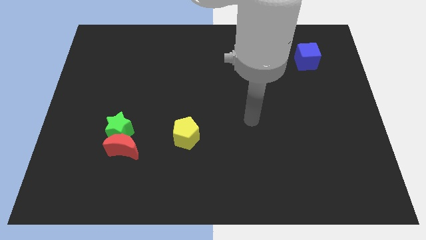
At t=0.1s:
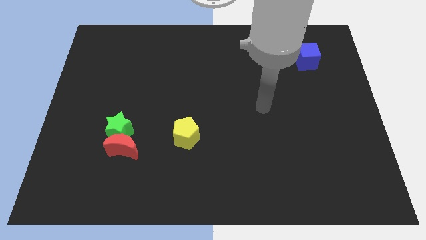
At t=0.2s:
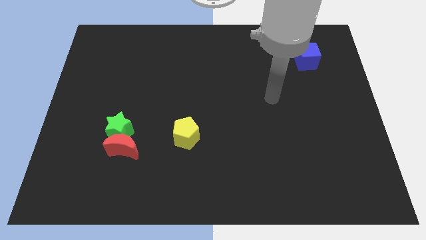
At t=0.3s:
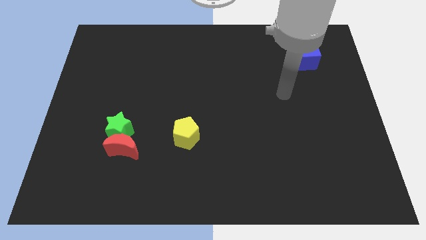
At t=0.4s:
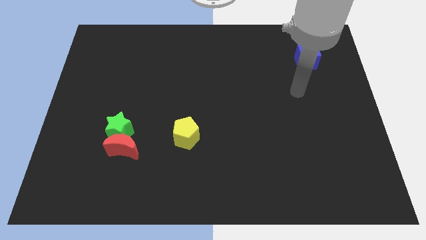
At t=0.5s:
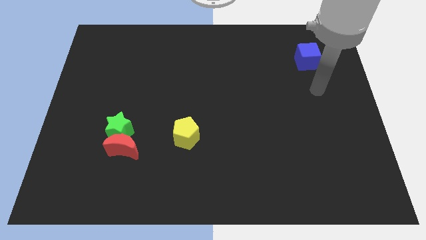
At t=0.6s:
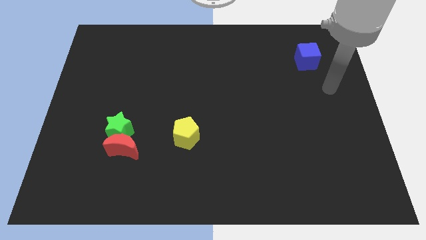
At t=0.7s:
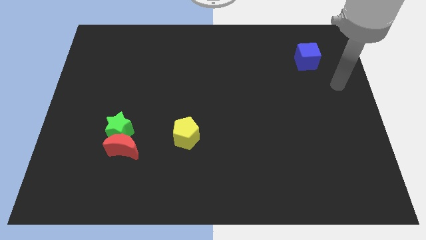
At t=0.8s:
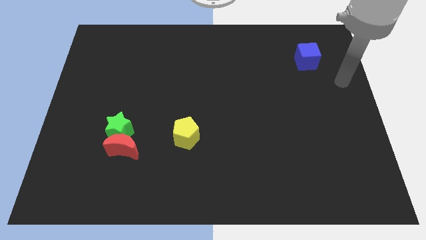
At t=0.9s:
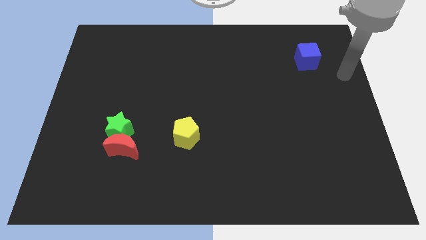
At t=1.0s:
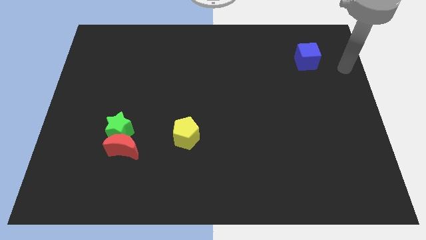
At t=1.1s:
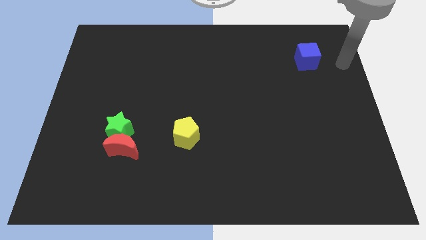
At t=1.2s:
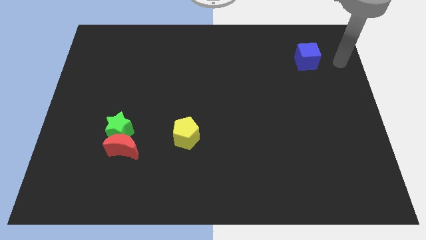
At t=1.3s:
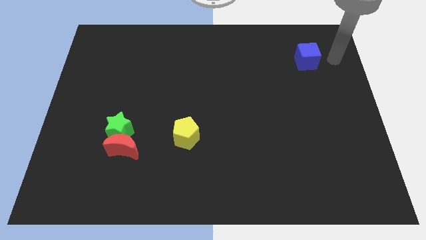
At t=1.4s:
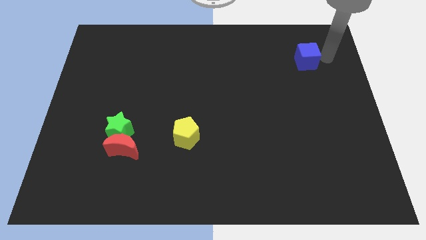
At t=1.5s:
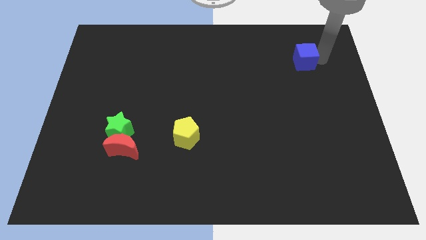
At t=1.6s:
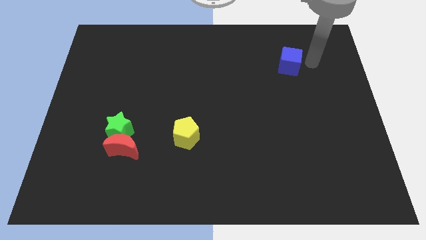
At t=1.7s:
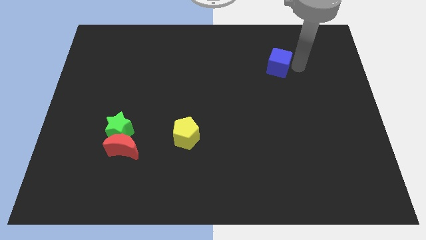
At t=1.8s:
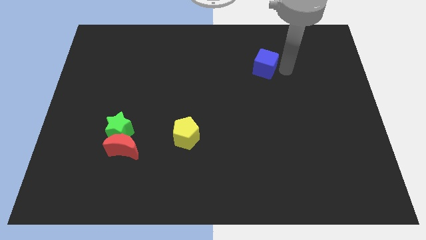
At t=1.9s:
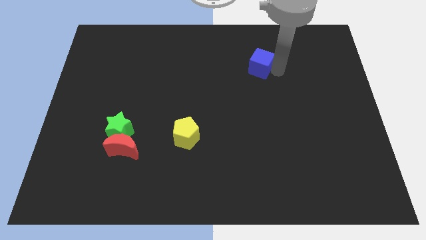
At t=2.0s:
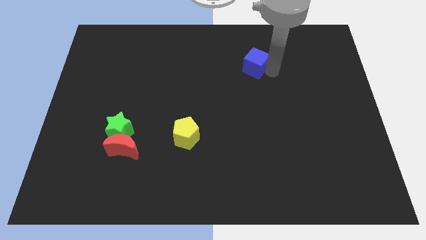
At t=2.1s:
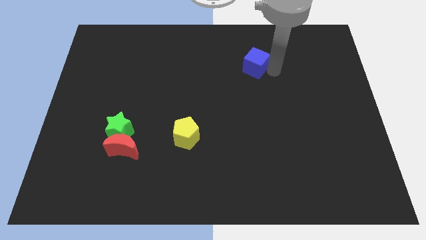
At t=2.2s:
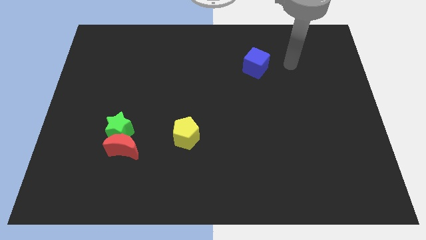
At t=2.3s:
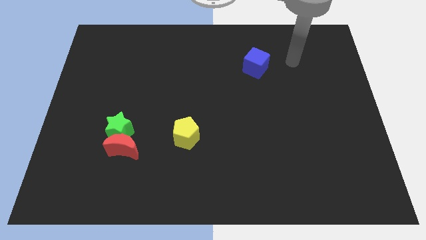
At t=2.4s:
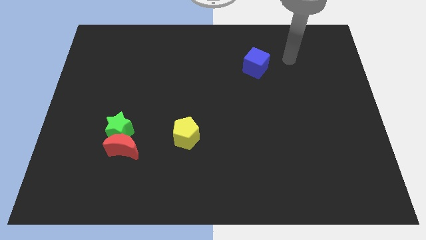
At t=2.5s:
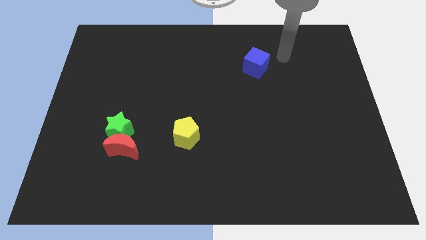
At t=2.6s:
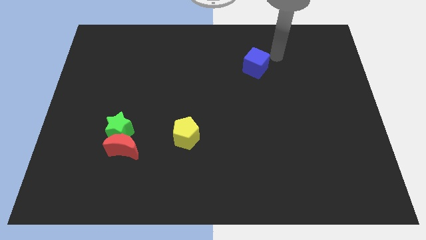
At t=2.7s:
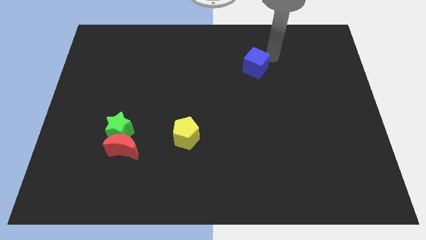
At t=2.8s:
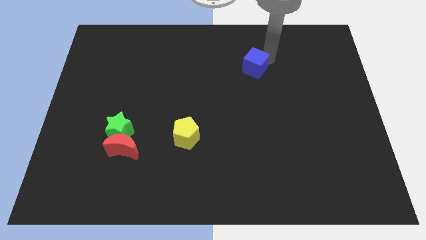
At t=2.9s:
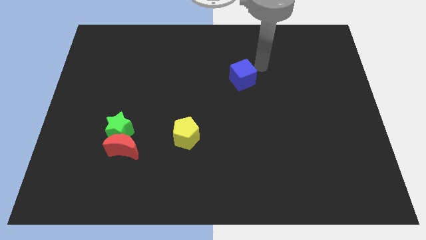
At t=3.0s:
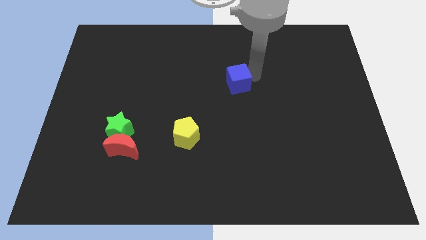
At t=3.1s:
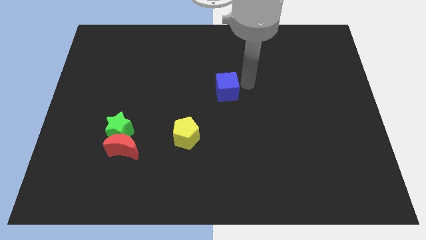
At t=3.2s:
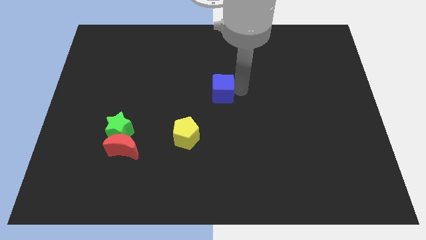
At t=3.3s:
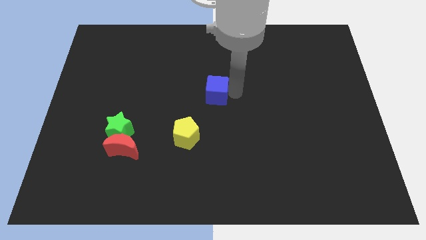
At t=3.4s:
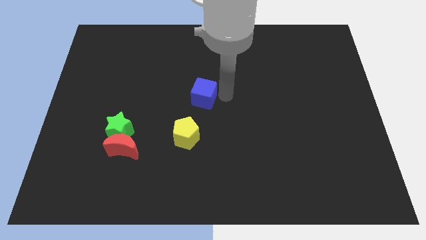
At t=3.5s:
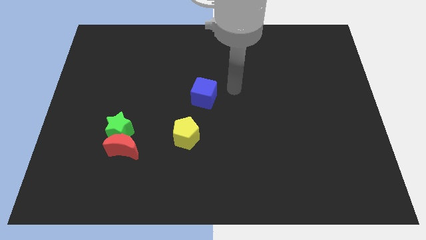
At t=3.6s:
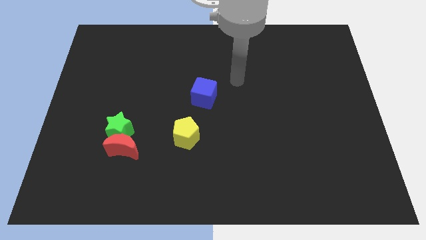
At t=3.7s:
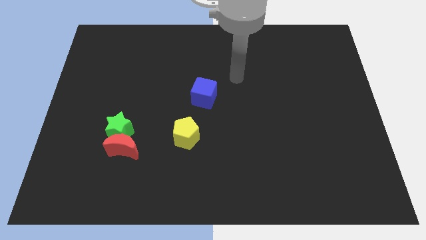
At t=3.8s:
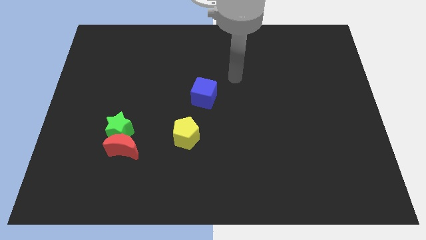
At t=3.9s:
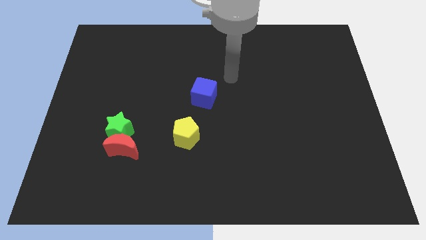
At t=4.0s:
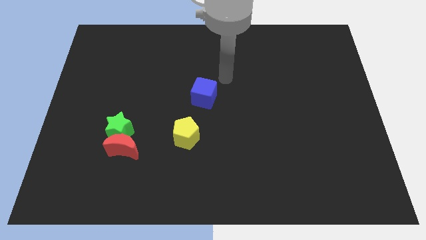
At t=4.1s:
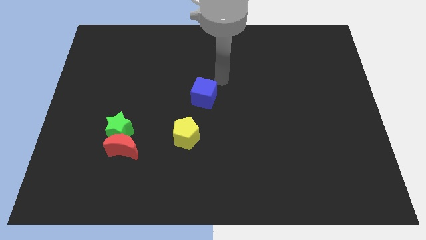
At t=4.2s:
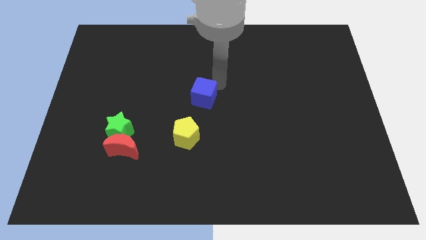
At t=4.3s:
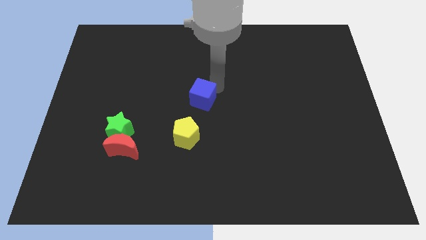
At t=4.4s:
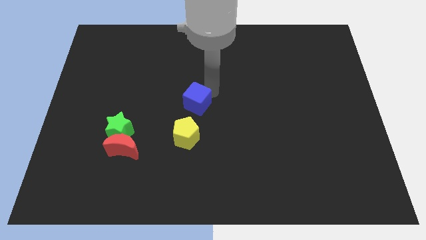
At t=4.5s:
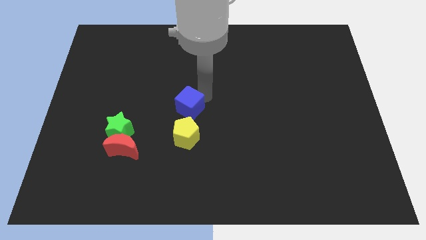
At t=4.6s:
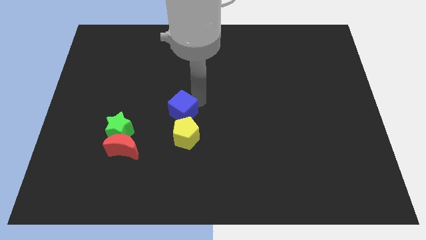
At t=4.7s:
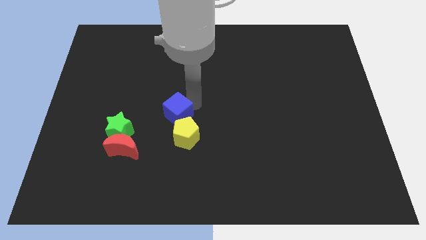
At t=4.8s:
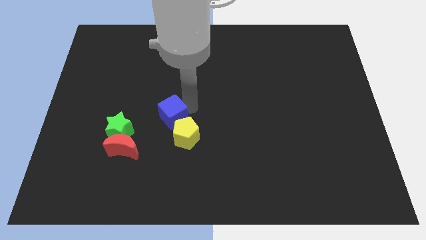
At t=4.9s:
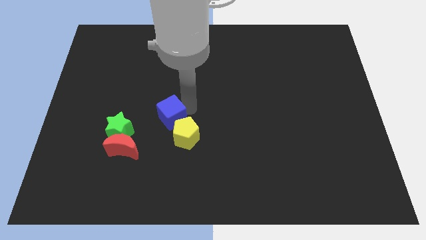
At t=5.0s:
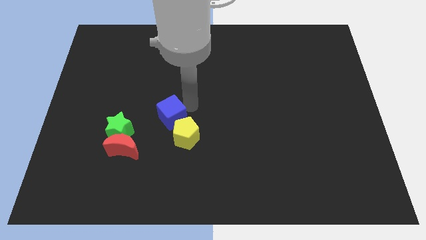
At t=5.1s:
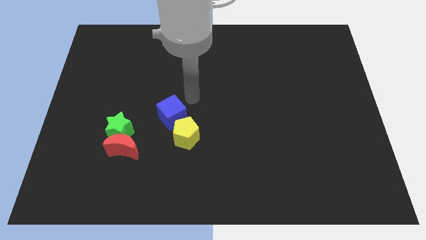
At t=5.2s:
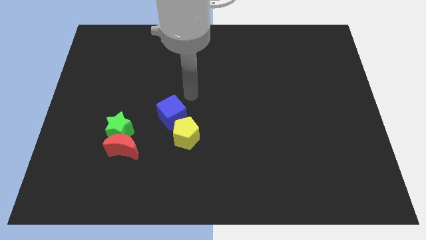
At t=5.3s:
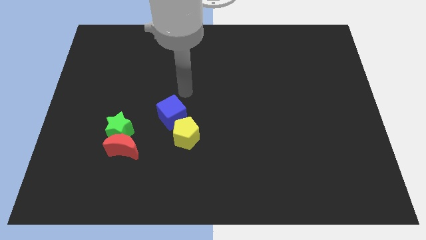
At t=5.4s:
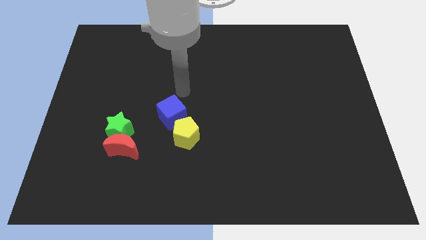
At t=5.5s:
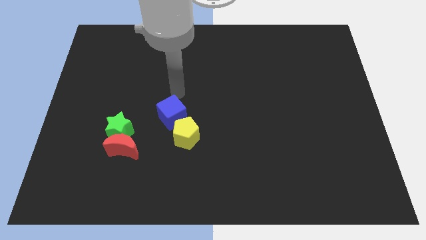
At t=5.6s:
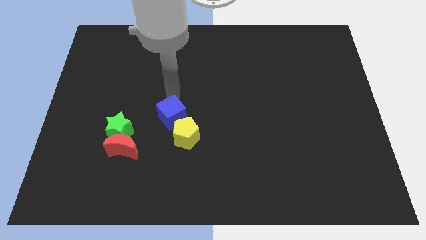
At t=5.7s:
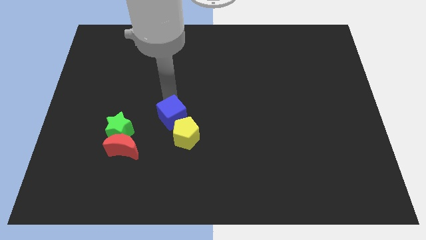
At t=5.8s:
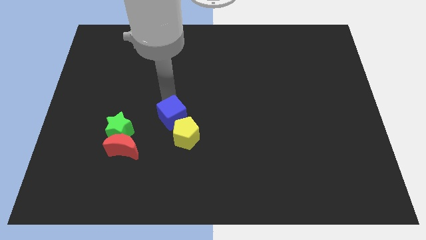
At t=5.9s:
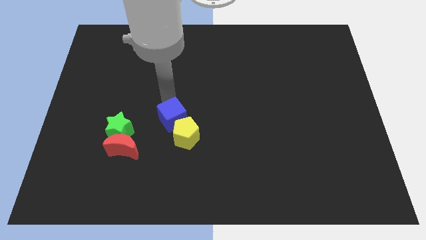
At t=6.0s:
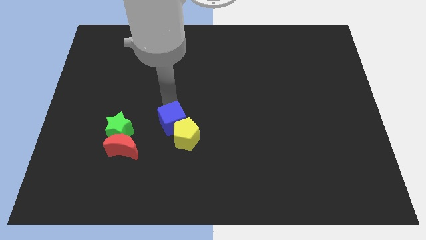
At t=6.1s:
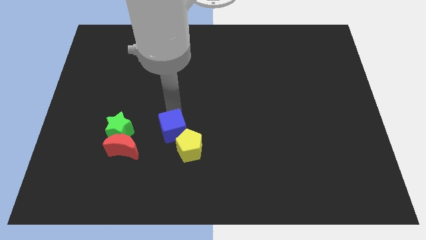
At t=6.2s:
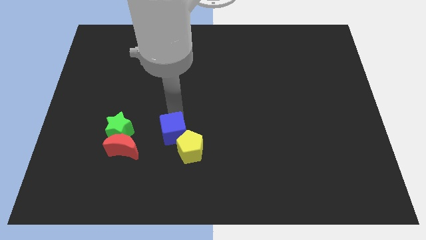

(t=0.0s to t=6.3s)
move the blue cube next to the yellow pentagon

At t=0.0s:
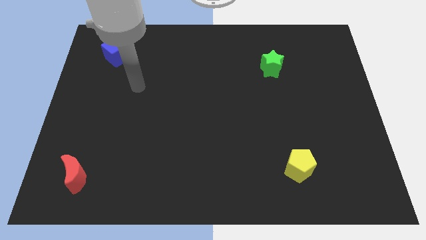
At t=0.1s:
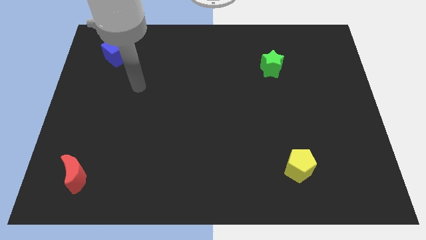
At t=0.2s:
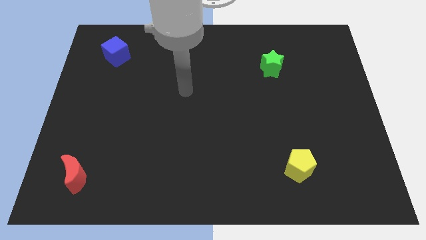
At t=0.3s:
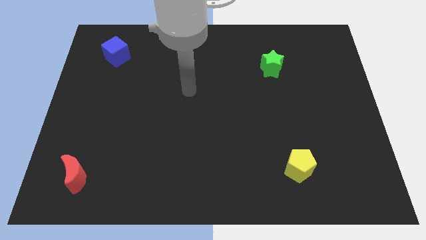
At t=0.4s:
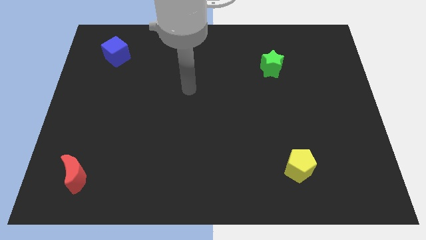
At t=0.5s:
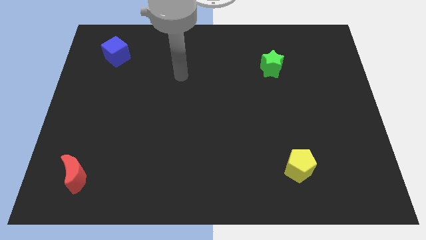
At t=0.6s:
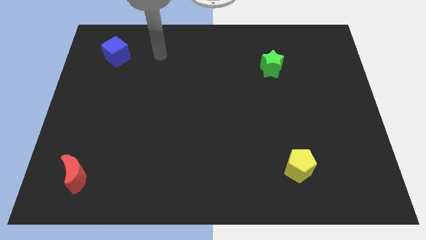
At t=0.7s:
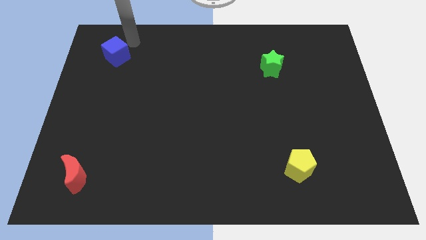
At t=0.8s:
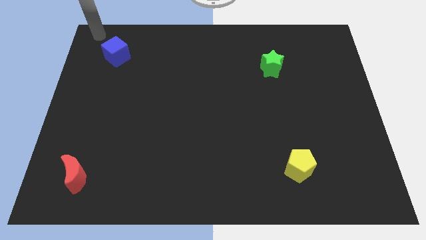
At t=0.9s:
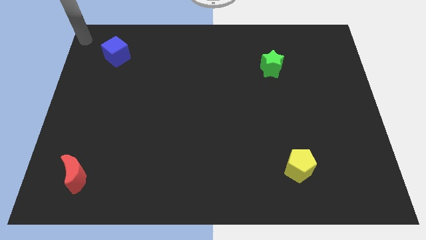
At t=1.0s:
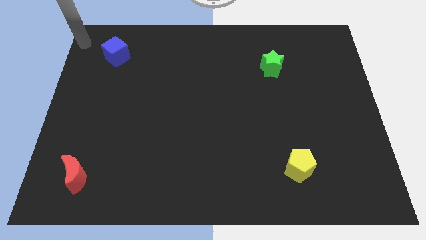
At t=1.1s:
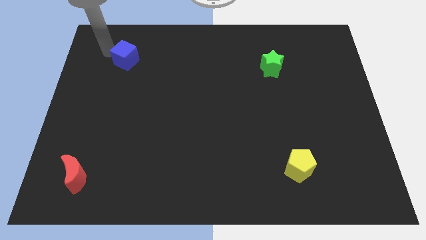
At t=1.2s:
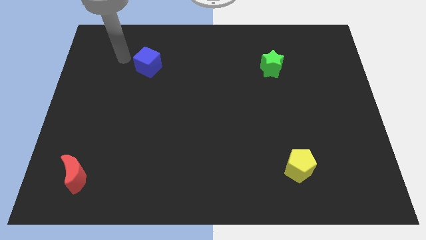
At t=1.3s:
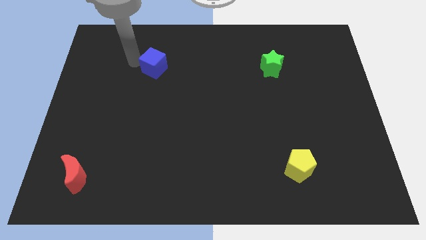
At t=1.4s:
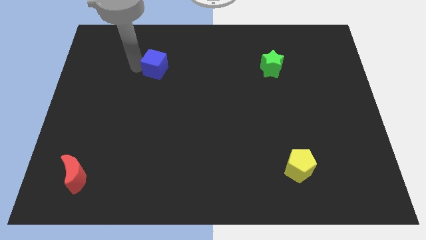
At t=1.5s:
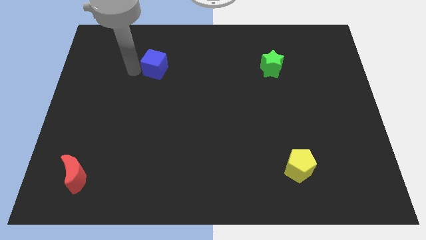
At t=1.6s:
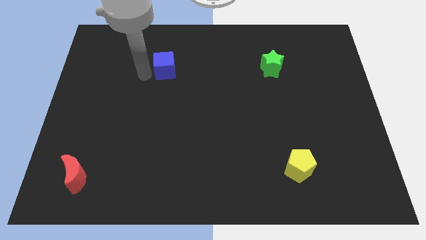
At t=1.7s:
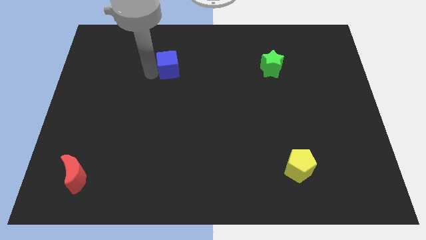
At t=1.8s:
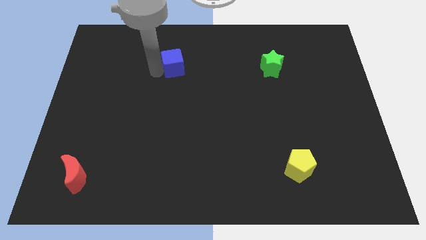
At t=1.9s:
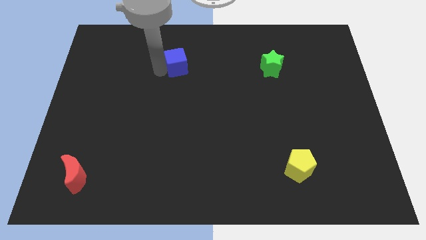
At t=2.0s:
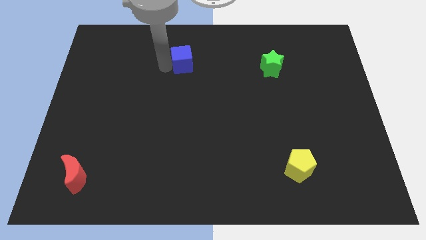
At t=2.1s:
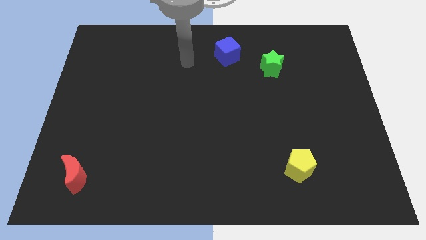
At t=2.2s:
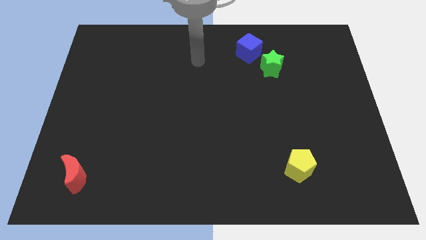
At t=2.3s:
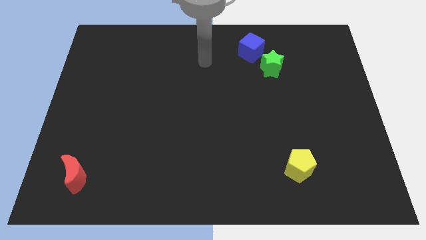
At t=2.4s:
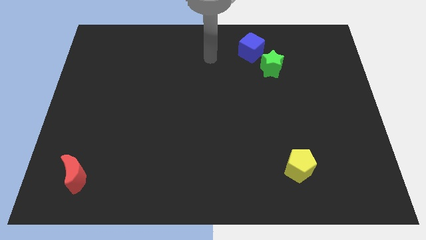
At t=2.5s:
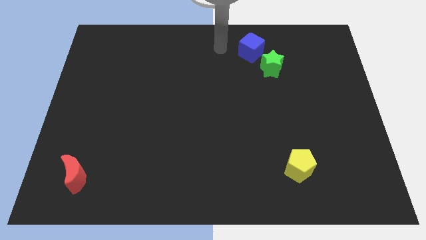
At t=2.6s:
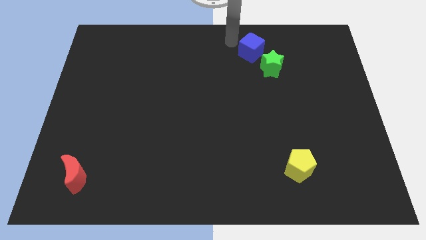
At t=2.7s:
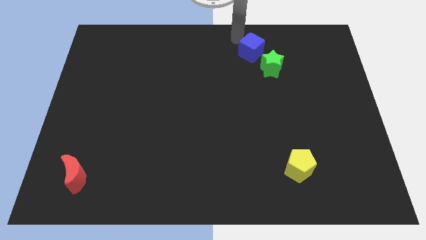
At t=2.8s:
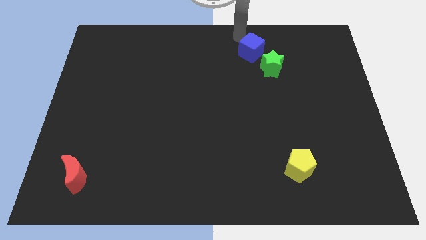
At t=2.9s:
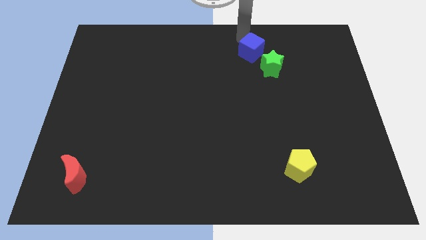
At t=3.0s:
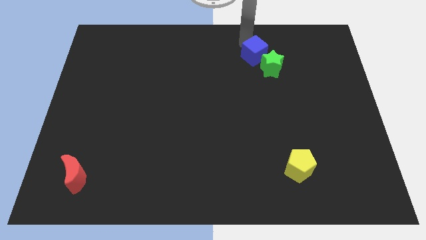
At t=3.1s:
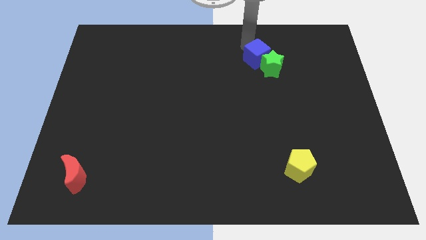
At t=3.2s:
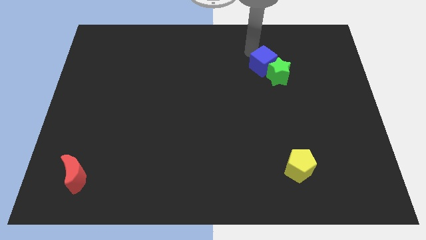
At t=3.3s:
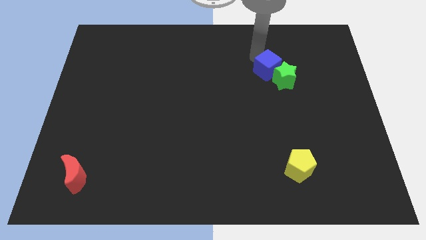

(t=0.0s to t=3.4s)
move the cube to the green block
